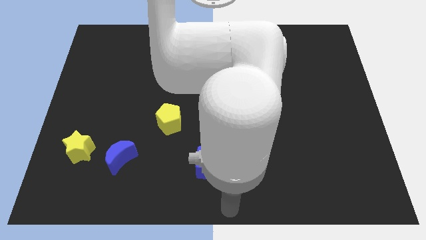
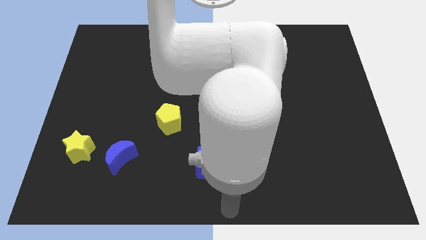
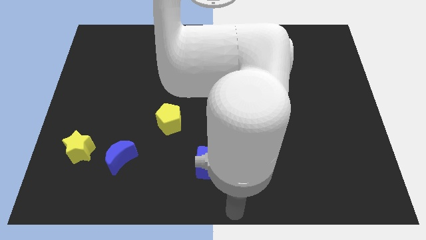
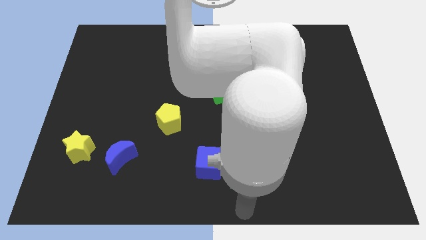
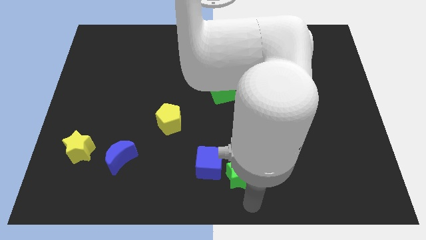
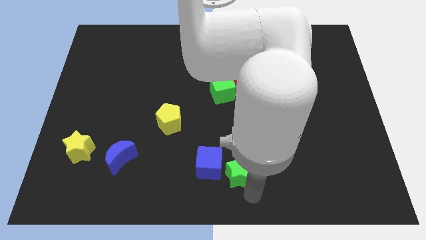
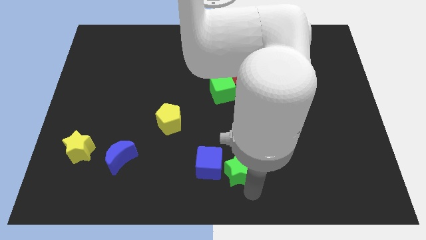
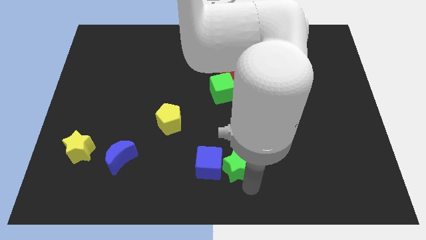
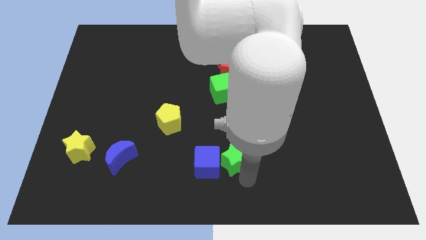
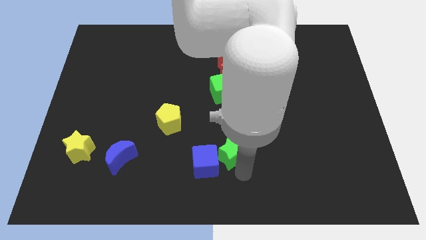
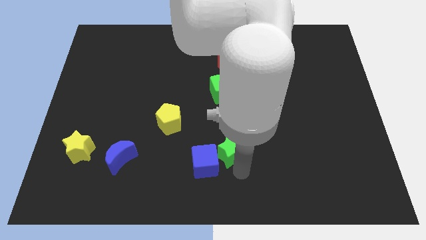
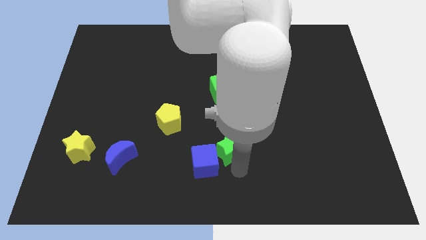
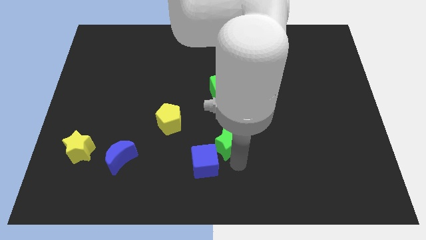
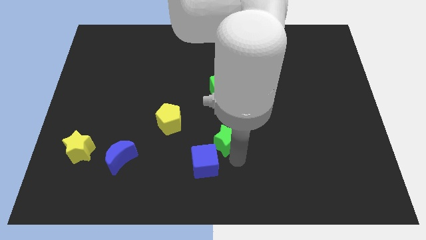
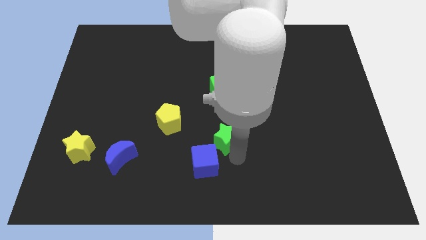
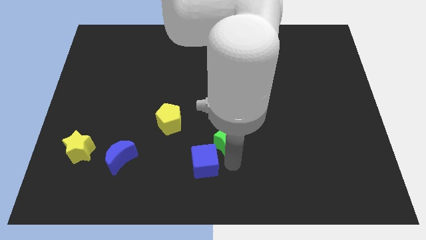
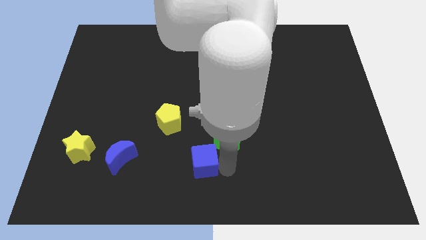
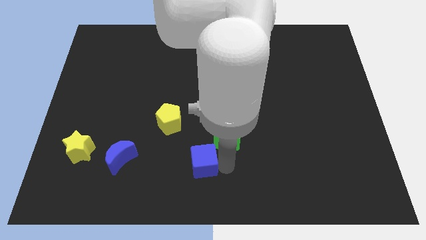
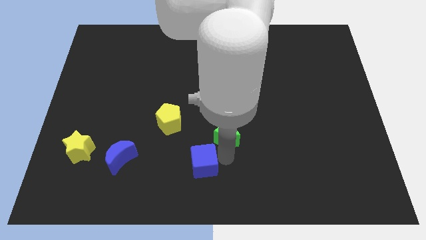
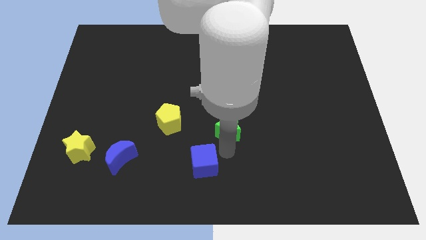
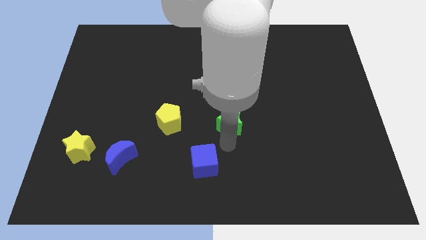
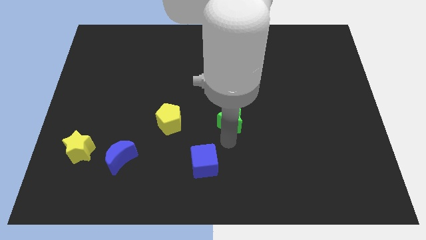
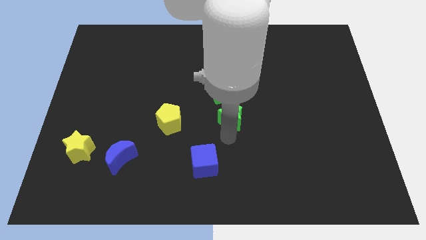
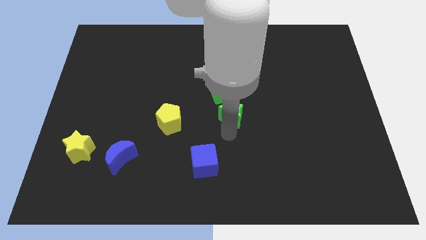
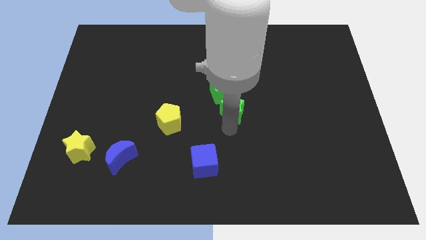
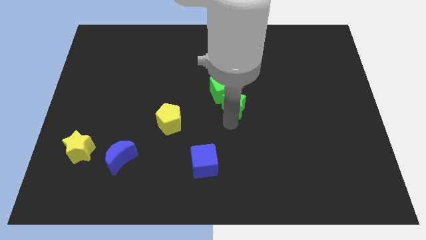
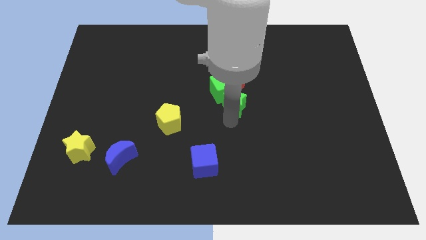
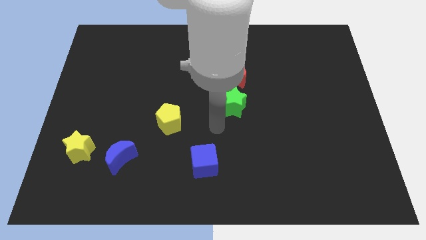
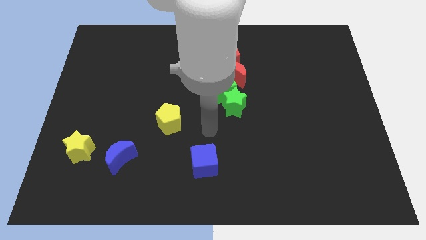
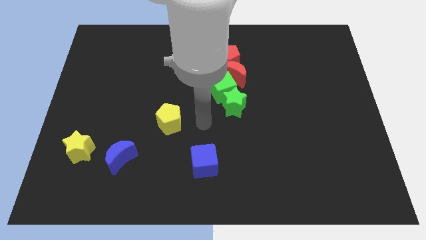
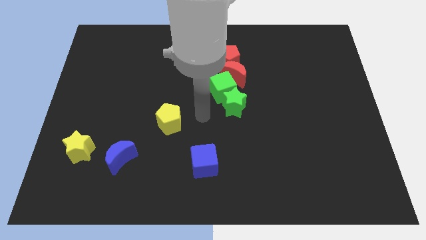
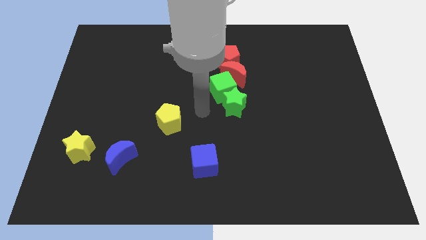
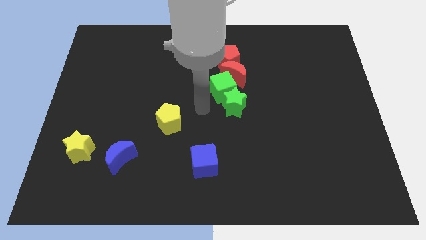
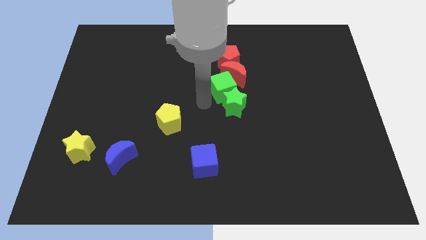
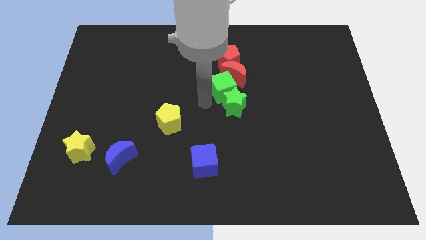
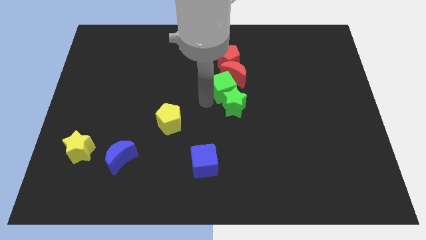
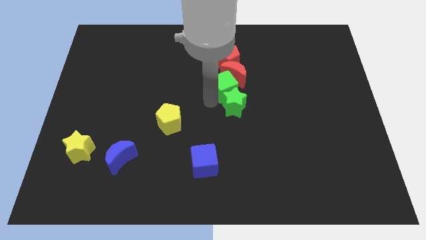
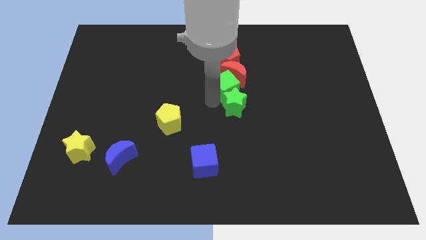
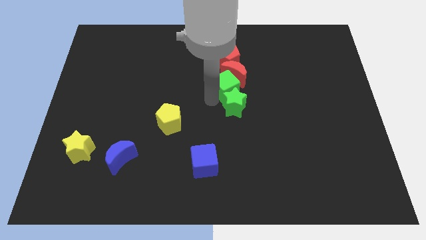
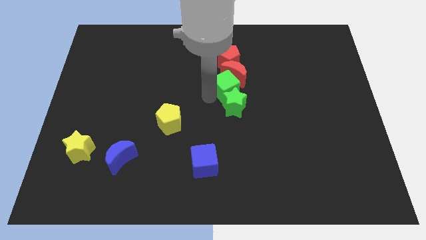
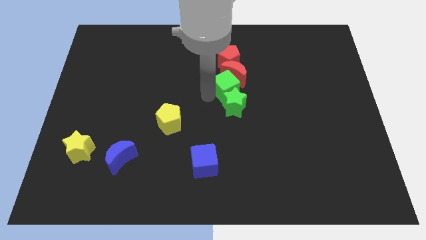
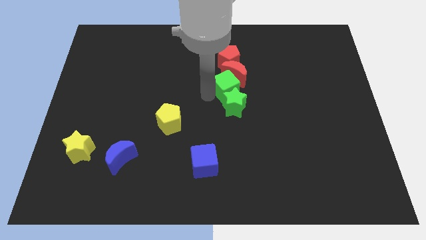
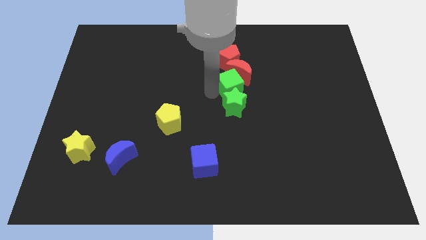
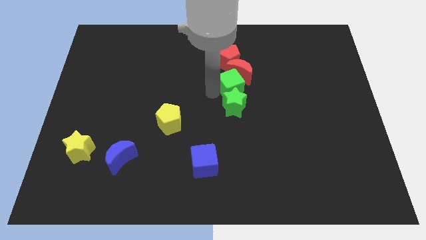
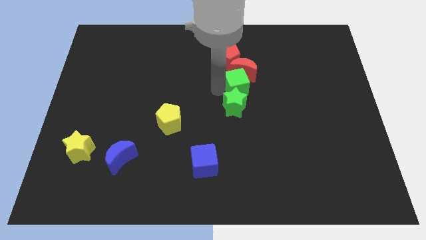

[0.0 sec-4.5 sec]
place the green star under the green cube

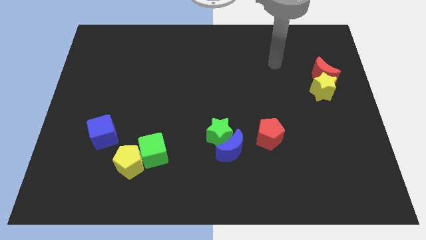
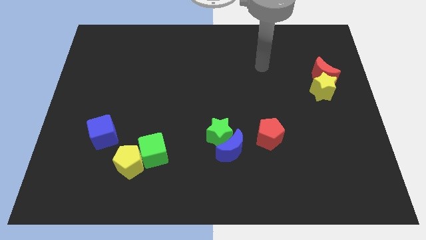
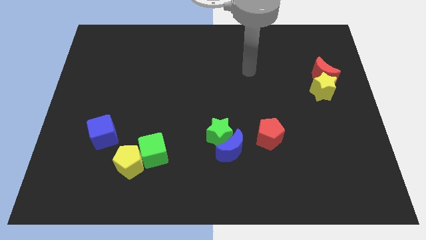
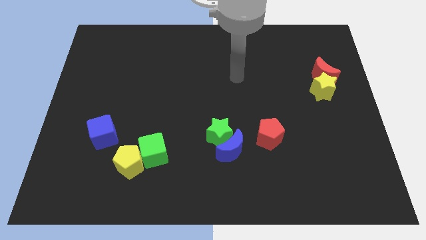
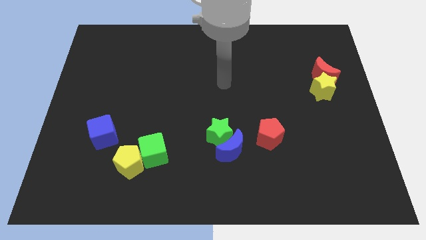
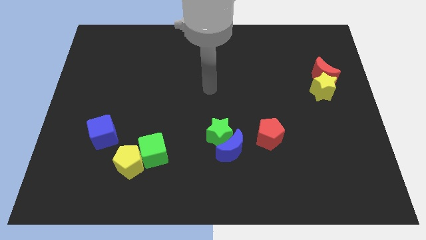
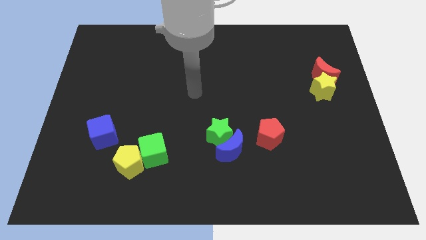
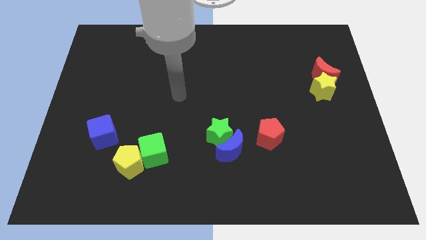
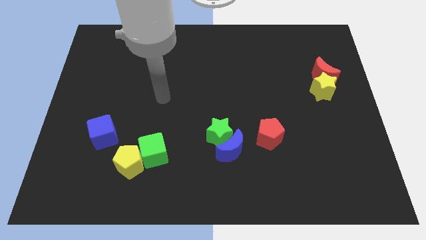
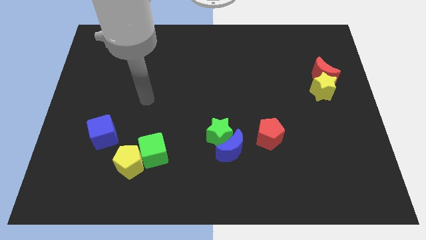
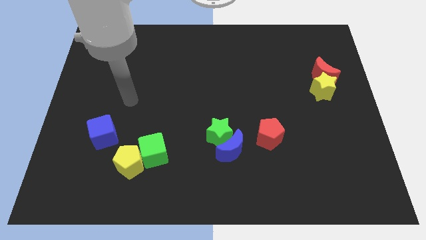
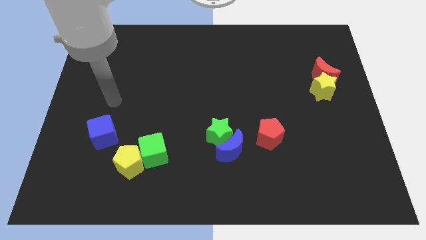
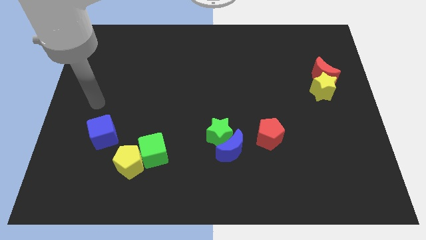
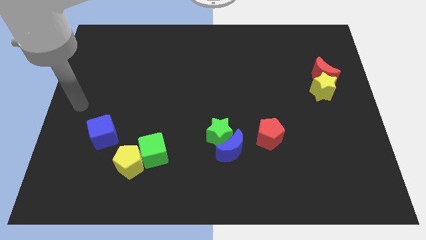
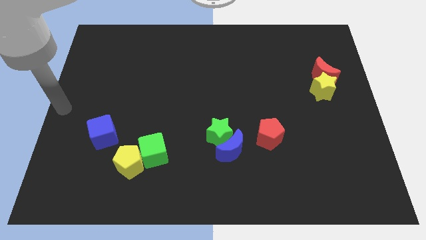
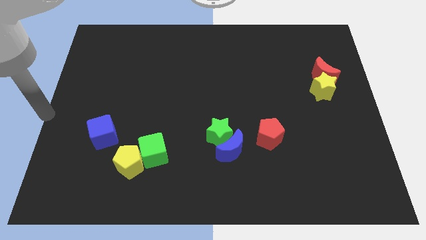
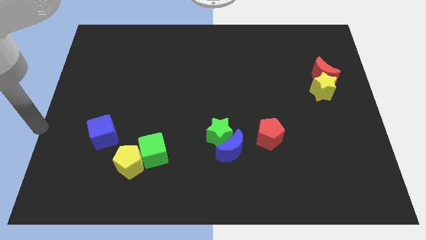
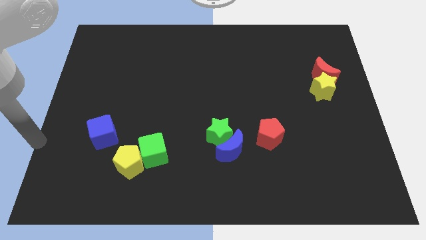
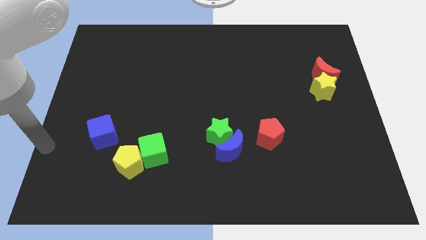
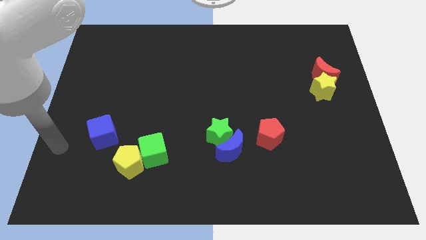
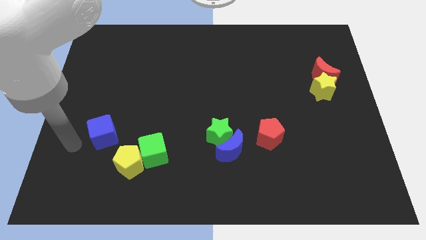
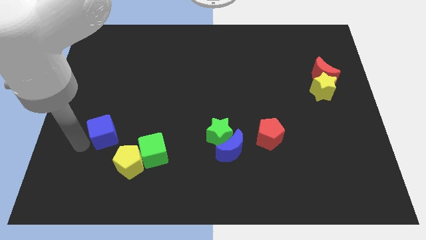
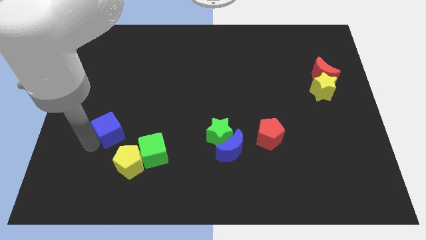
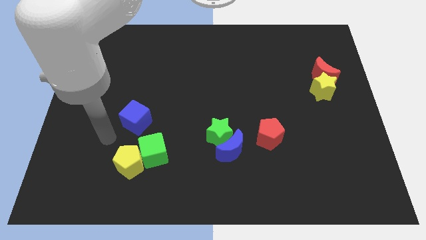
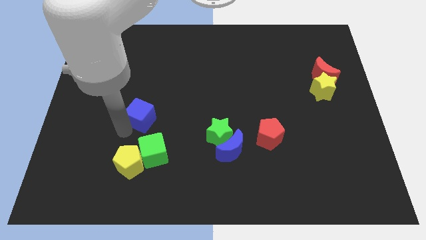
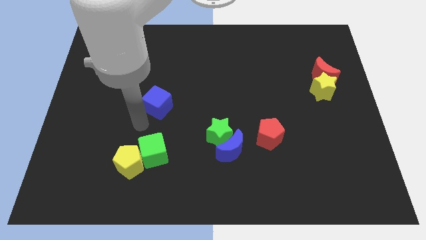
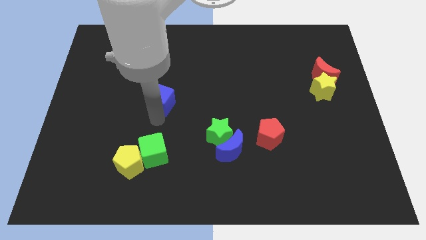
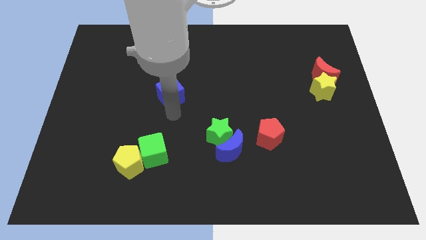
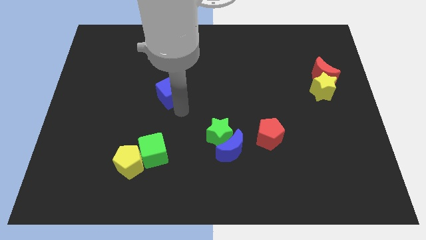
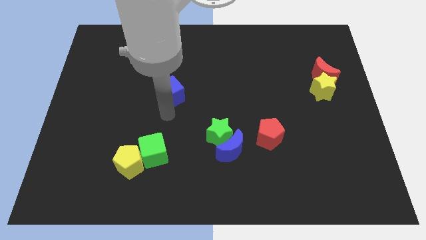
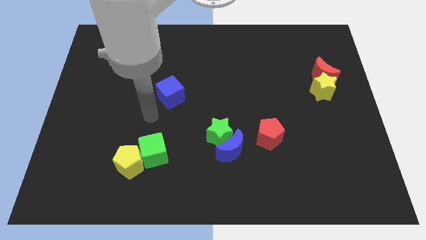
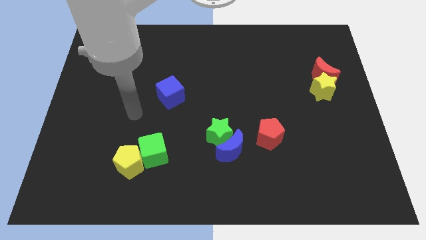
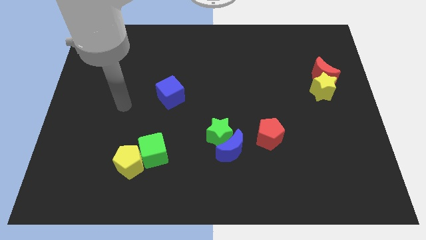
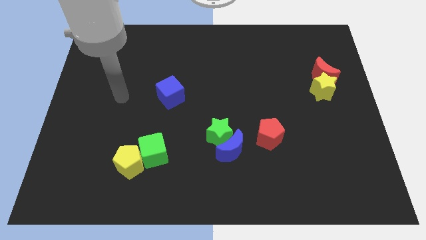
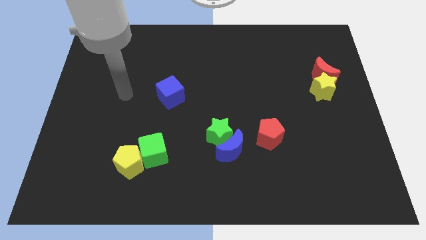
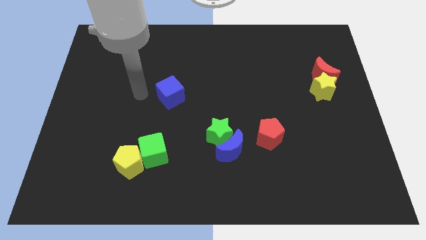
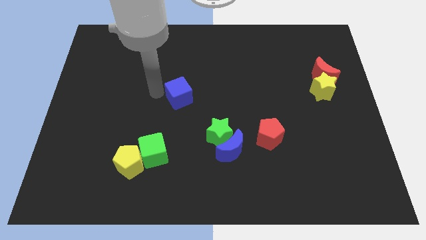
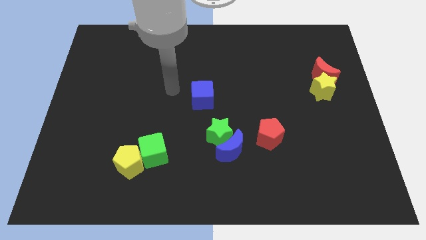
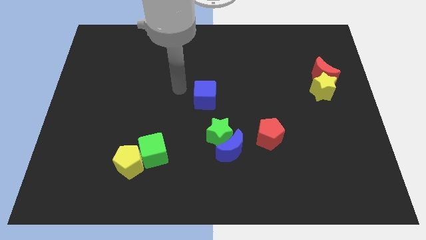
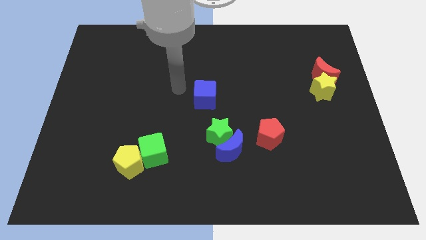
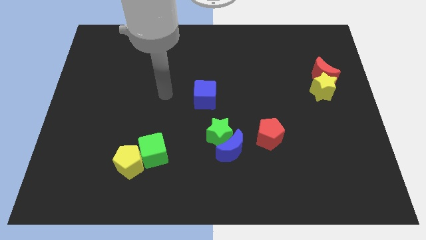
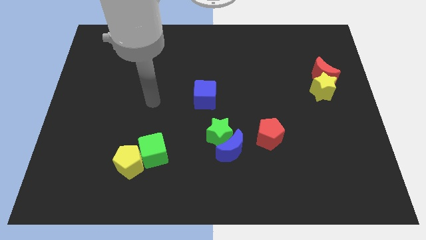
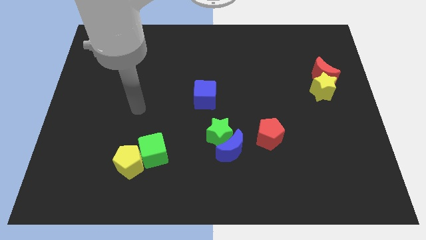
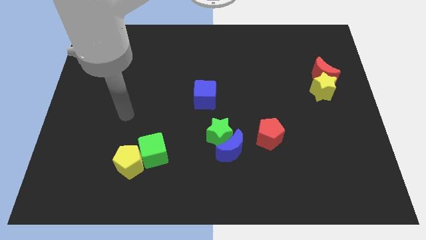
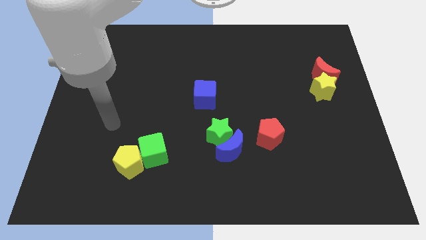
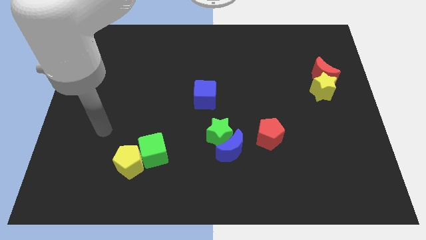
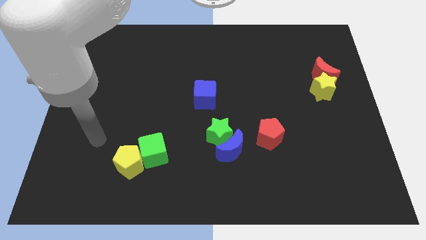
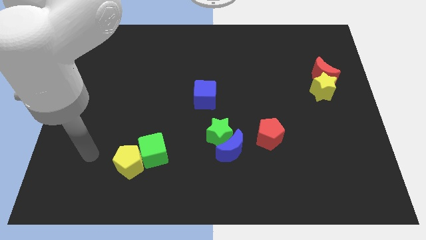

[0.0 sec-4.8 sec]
push blue block to center of board
